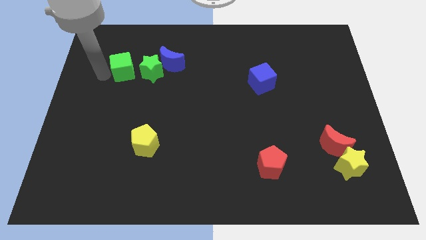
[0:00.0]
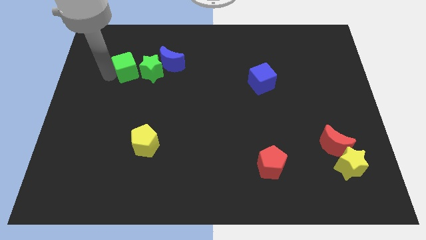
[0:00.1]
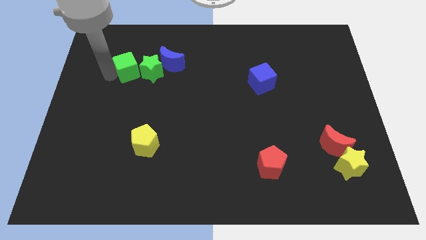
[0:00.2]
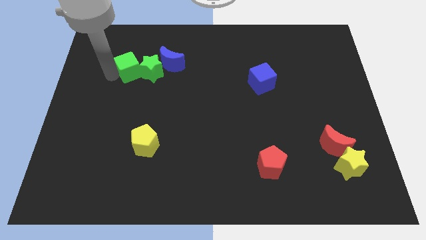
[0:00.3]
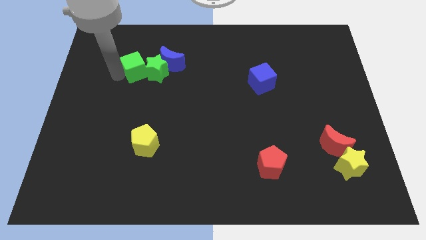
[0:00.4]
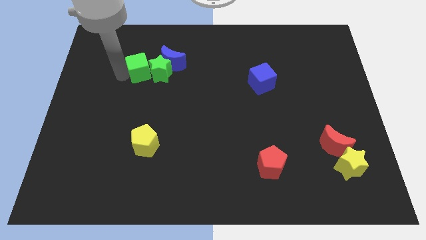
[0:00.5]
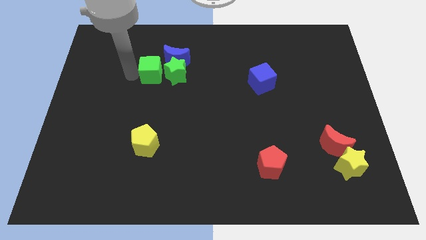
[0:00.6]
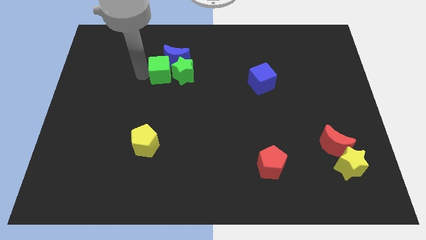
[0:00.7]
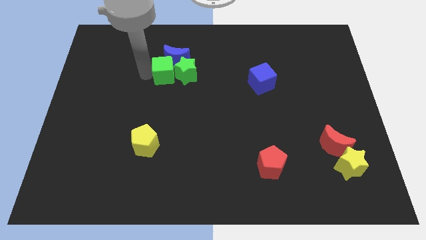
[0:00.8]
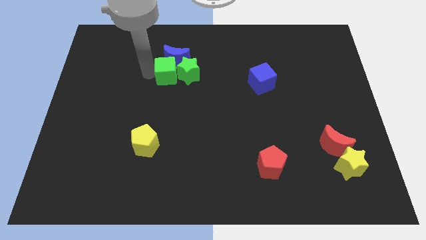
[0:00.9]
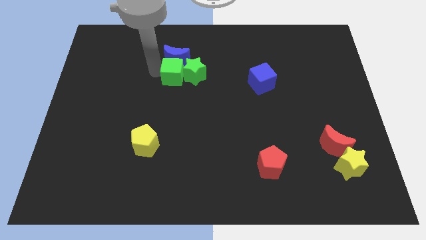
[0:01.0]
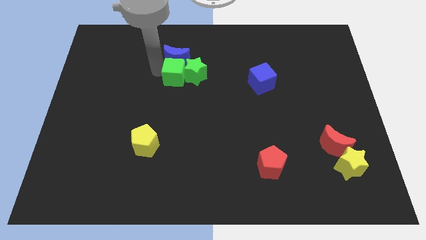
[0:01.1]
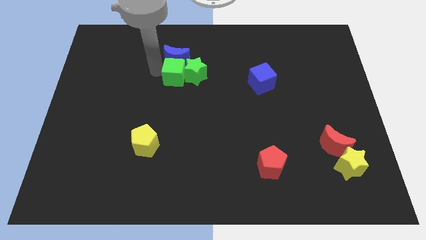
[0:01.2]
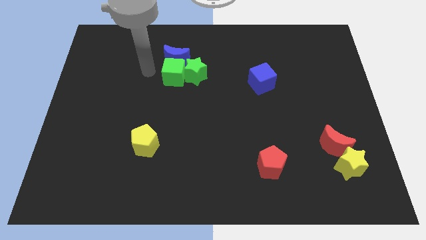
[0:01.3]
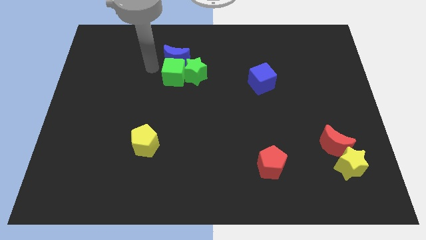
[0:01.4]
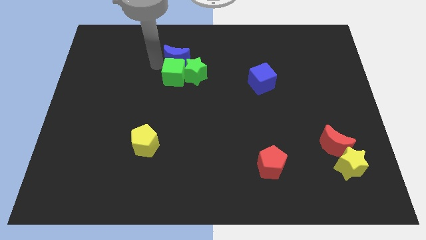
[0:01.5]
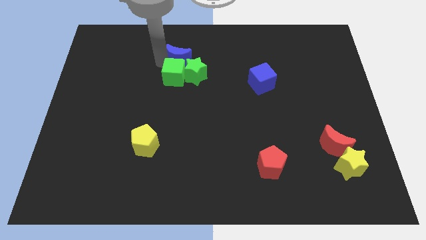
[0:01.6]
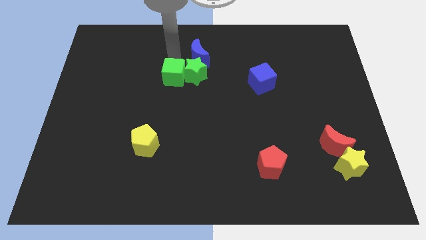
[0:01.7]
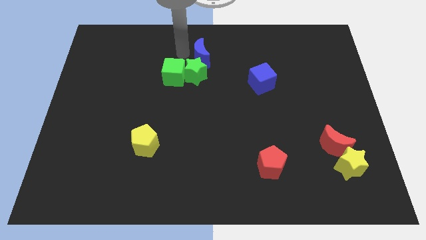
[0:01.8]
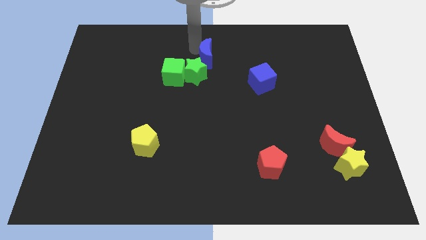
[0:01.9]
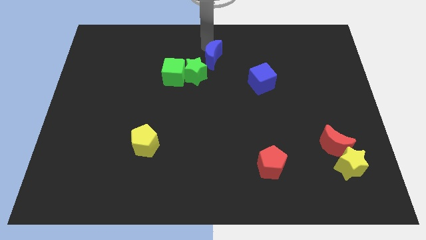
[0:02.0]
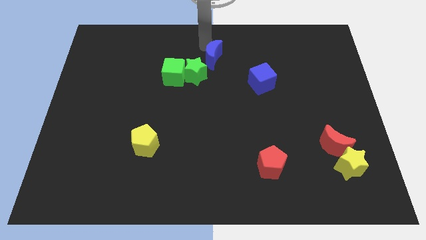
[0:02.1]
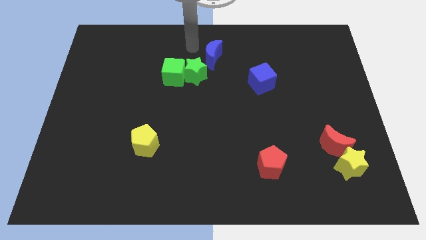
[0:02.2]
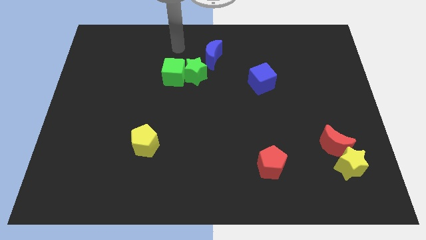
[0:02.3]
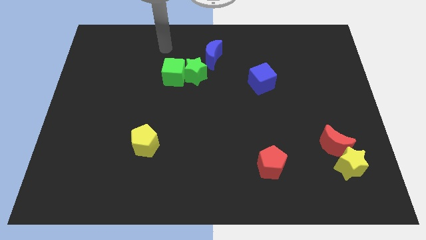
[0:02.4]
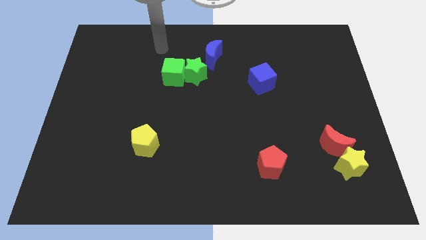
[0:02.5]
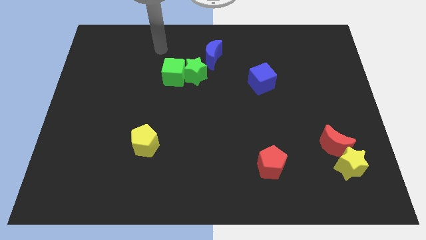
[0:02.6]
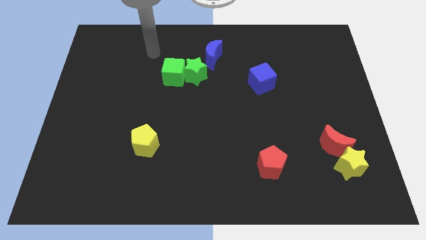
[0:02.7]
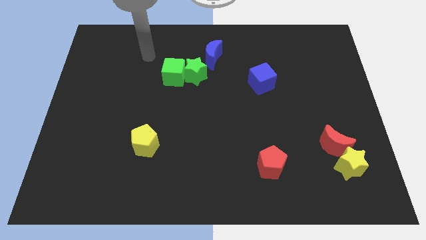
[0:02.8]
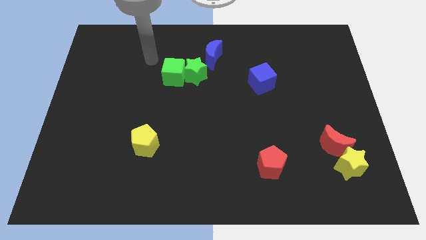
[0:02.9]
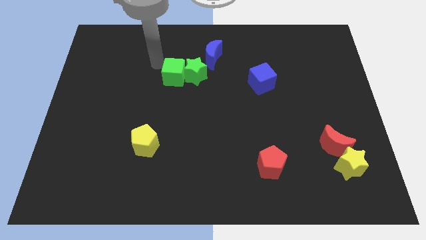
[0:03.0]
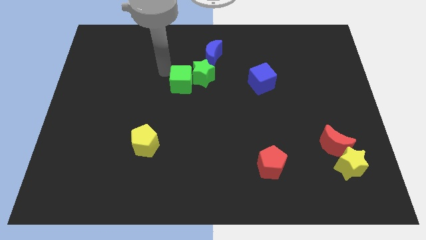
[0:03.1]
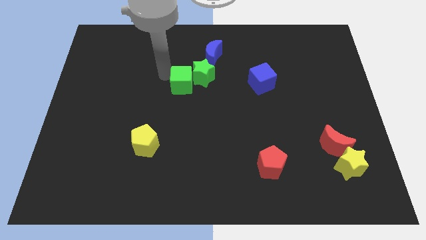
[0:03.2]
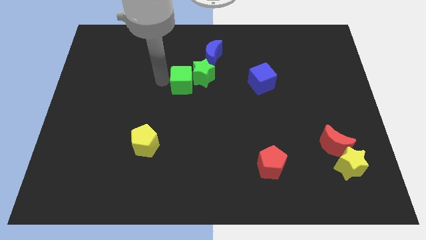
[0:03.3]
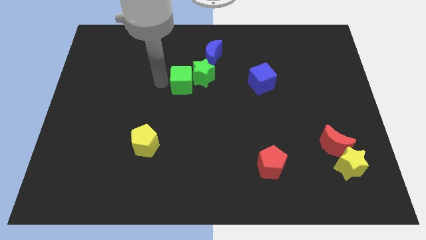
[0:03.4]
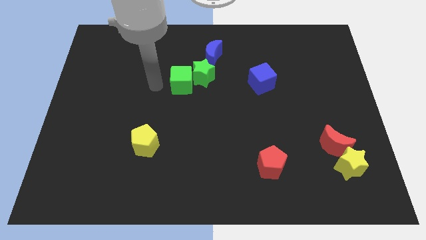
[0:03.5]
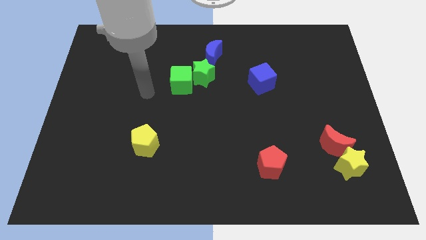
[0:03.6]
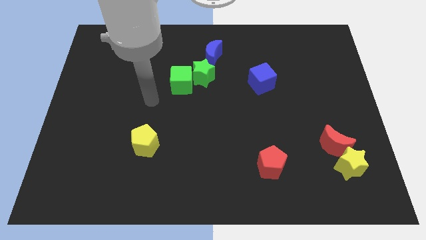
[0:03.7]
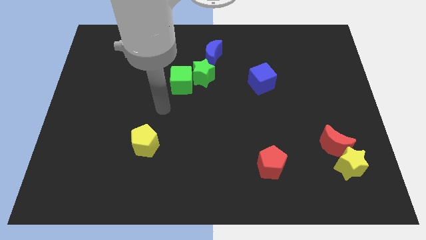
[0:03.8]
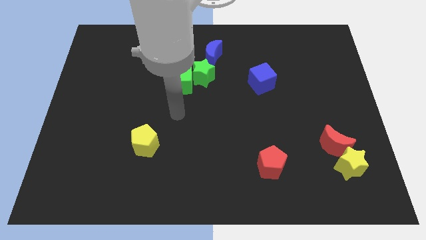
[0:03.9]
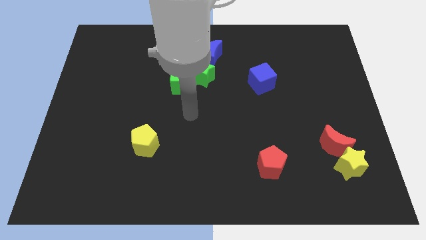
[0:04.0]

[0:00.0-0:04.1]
push both the green blocks to the bottom left side of the blue crescent

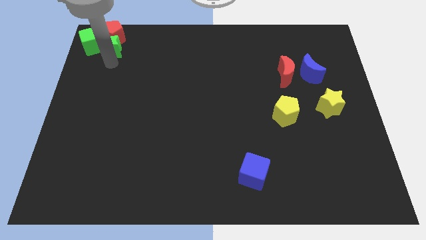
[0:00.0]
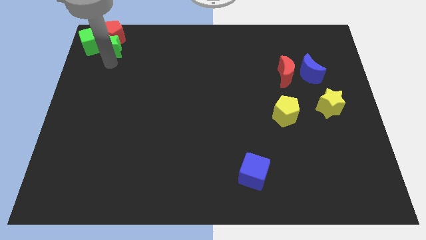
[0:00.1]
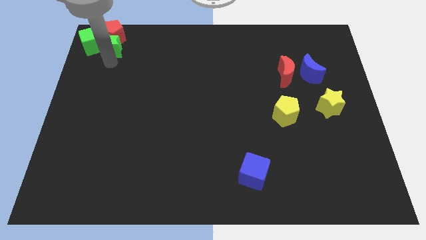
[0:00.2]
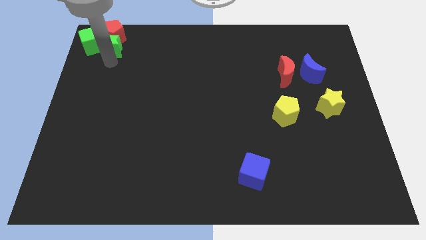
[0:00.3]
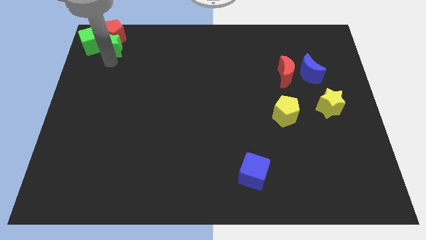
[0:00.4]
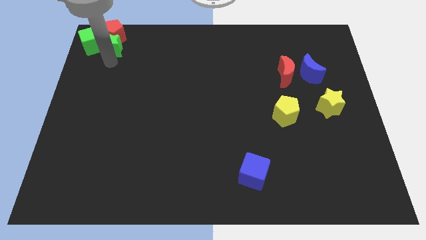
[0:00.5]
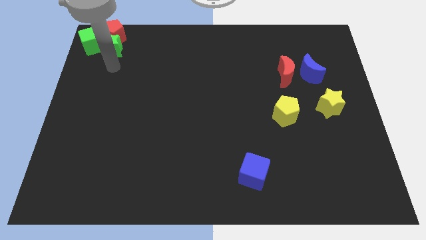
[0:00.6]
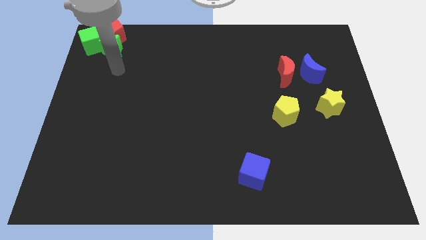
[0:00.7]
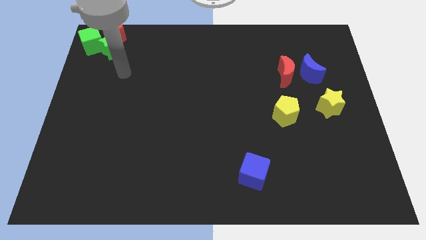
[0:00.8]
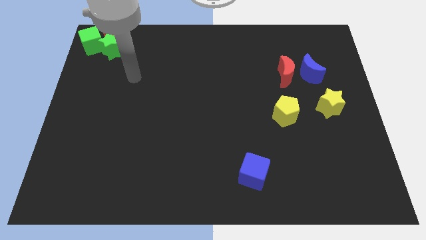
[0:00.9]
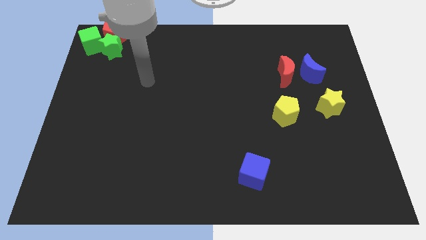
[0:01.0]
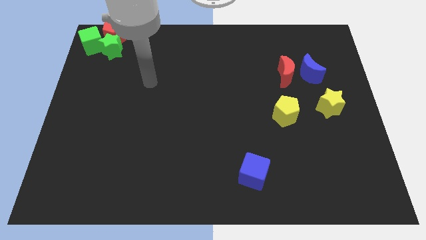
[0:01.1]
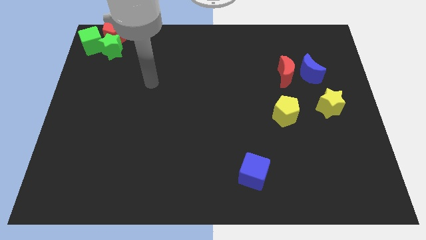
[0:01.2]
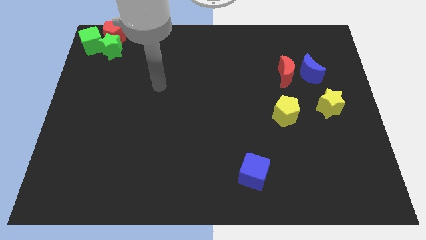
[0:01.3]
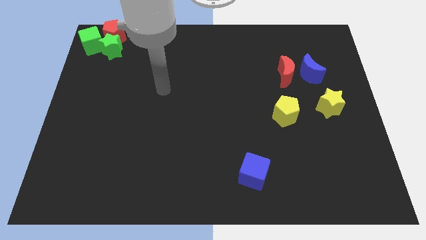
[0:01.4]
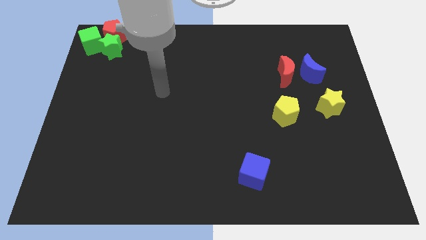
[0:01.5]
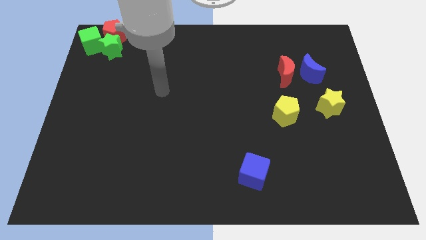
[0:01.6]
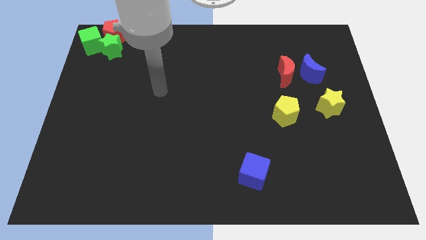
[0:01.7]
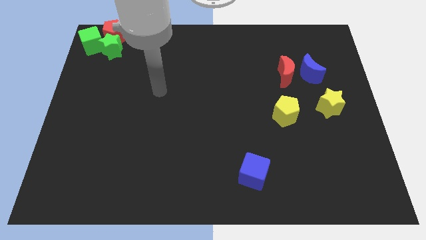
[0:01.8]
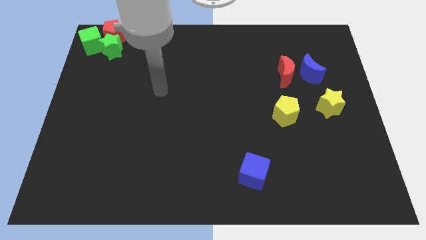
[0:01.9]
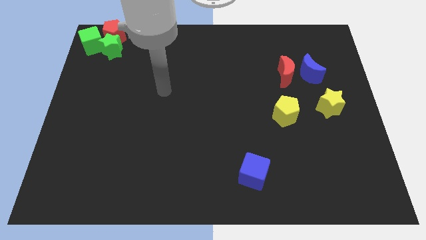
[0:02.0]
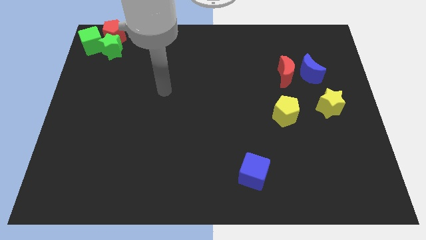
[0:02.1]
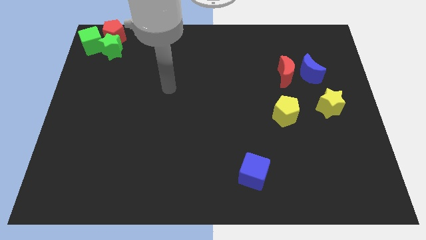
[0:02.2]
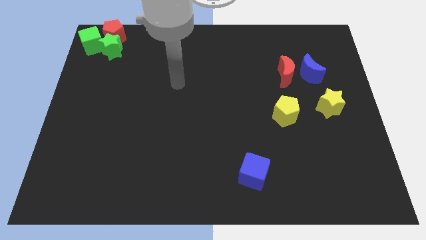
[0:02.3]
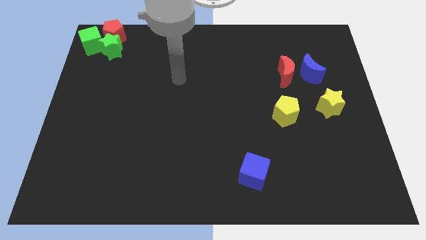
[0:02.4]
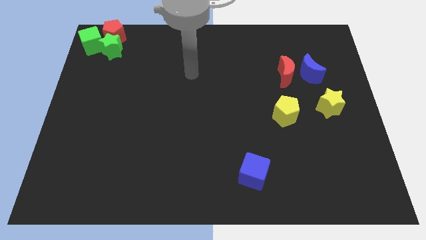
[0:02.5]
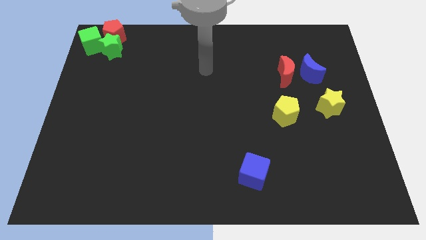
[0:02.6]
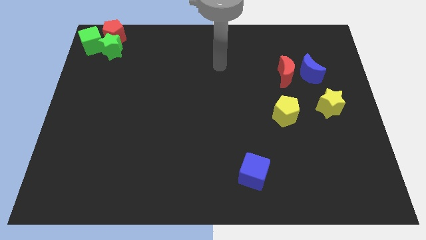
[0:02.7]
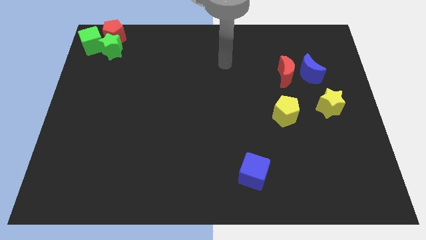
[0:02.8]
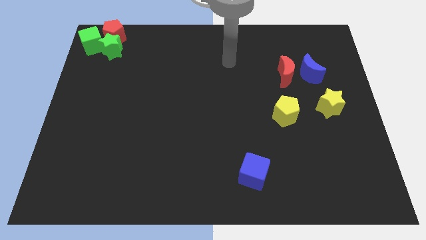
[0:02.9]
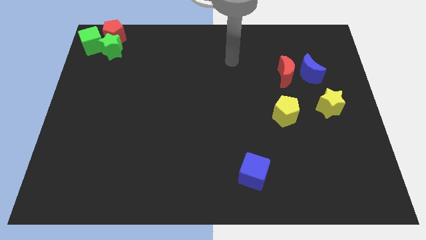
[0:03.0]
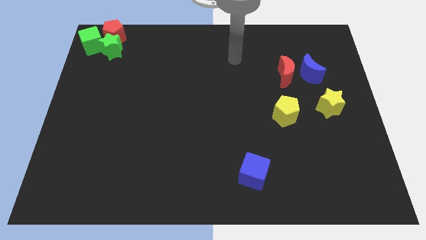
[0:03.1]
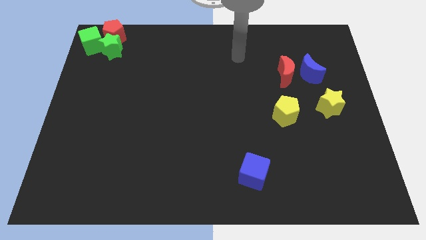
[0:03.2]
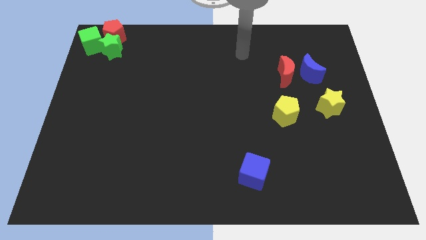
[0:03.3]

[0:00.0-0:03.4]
push your hand away from the green star

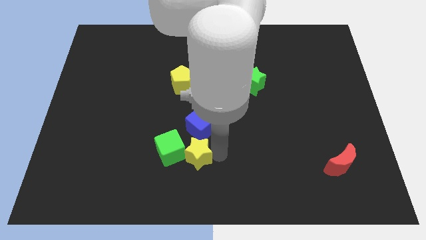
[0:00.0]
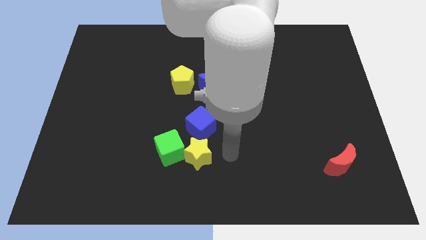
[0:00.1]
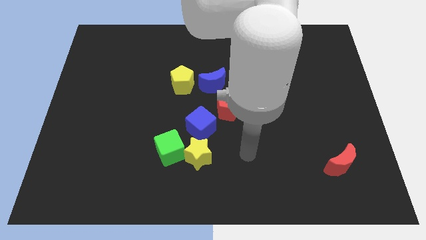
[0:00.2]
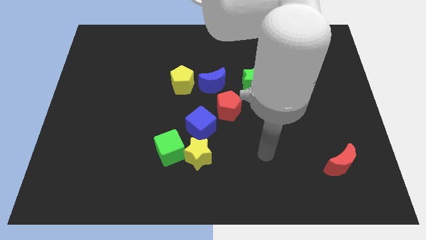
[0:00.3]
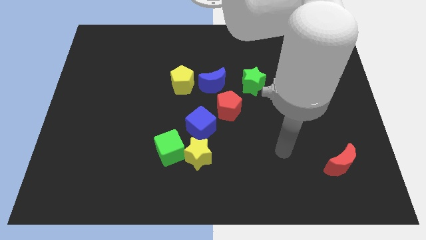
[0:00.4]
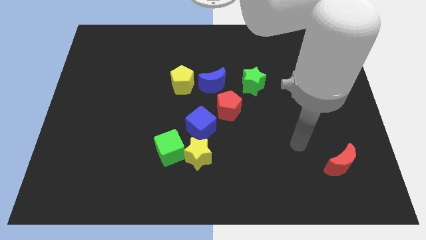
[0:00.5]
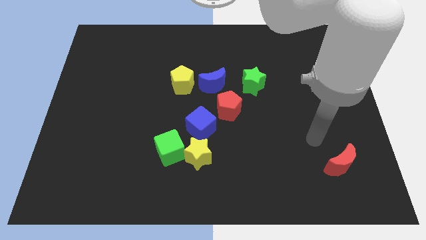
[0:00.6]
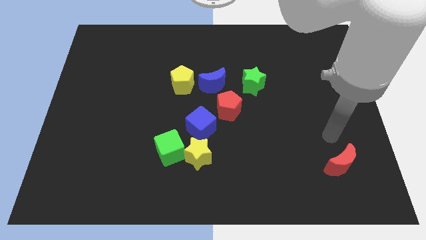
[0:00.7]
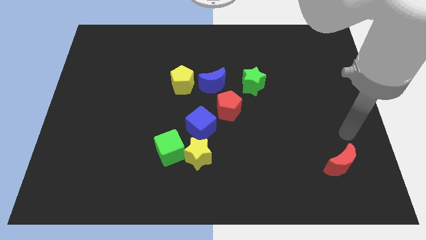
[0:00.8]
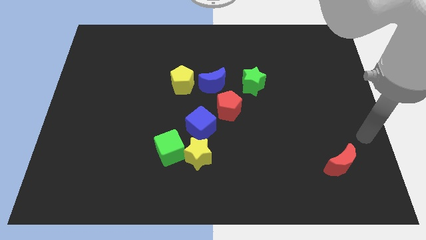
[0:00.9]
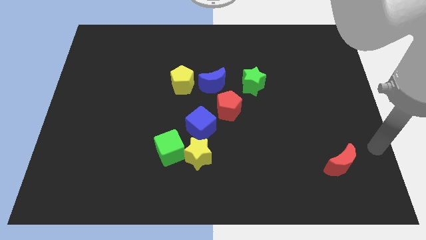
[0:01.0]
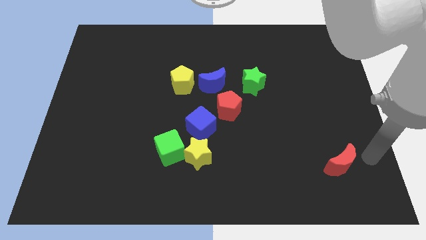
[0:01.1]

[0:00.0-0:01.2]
move the arm away from the yellow star

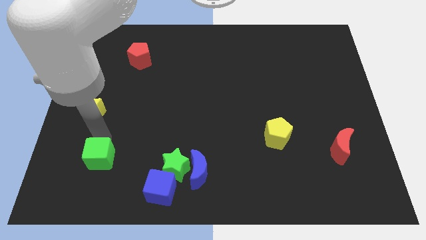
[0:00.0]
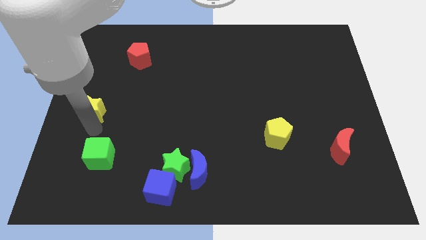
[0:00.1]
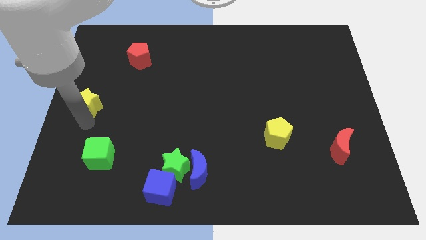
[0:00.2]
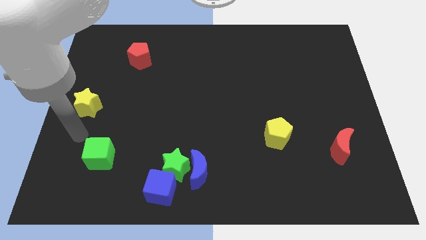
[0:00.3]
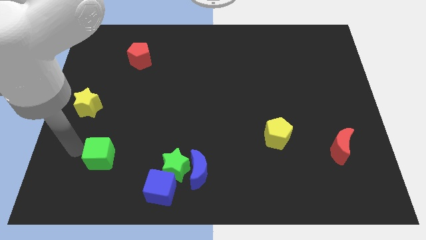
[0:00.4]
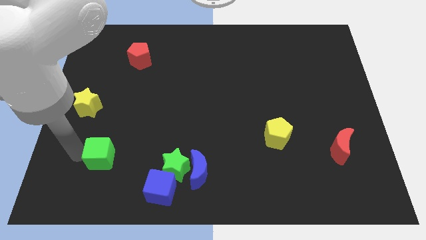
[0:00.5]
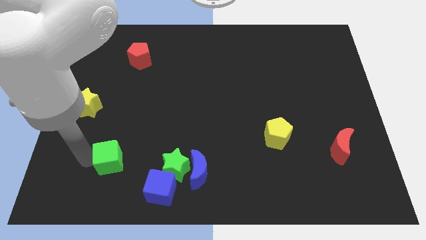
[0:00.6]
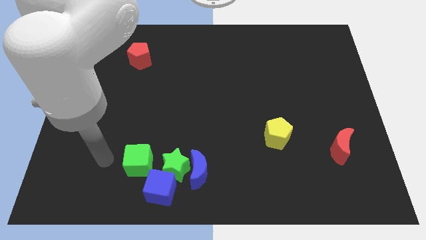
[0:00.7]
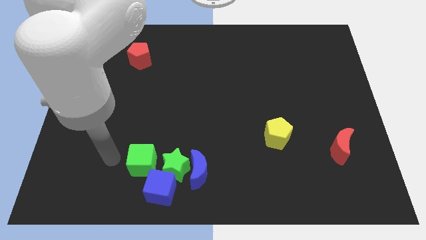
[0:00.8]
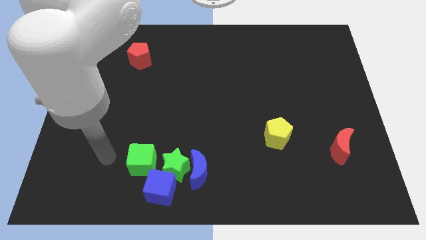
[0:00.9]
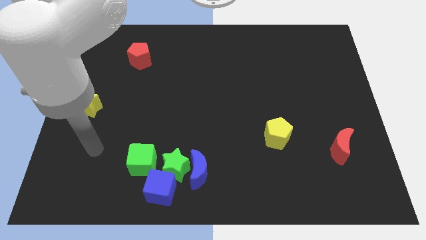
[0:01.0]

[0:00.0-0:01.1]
move the green cube towards the green star
